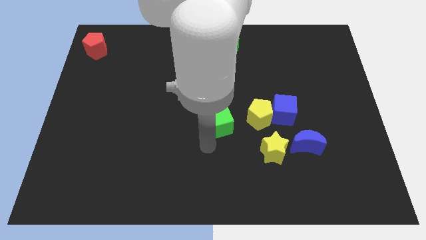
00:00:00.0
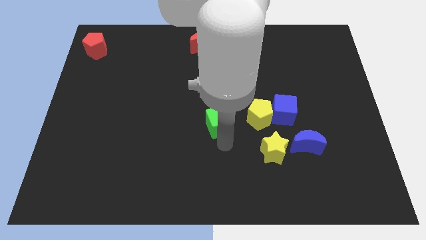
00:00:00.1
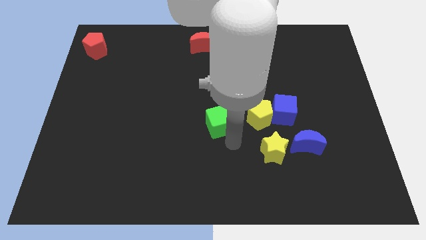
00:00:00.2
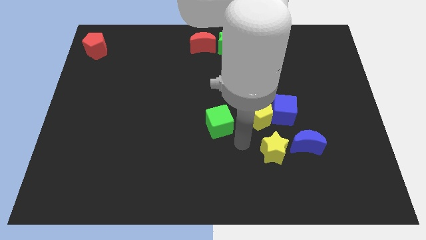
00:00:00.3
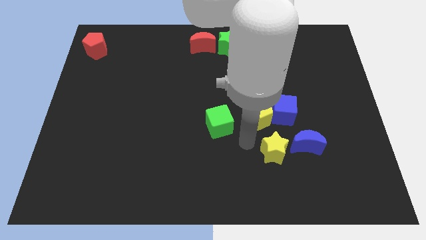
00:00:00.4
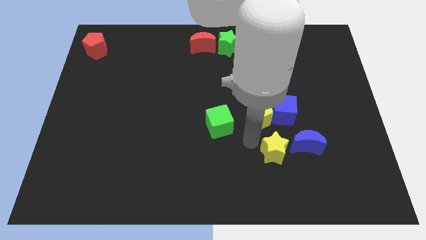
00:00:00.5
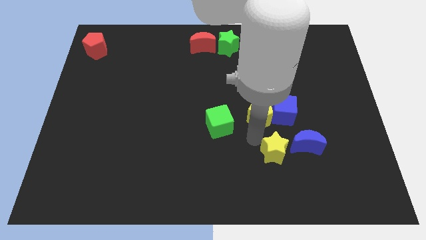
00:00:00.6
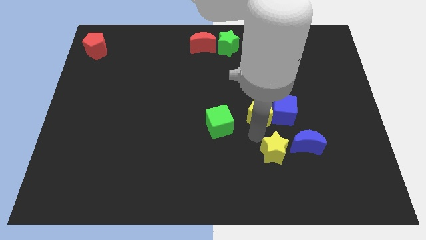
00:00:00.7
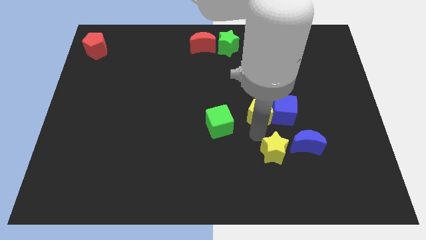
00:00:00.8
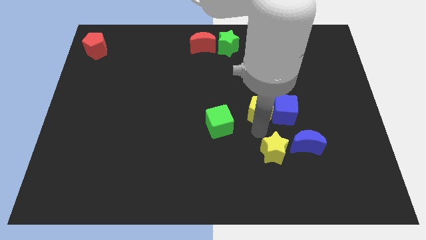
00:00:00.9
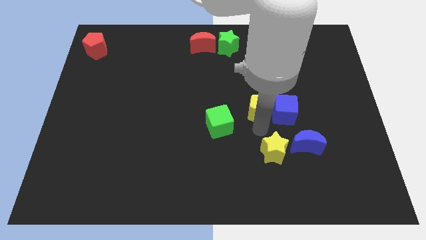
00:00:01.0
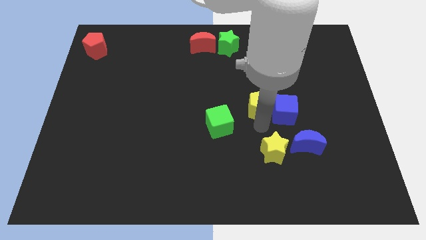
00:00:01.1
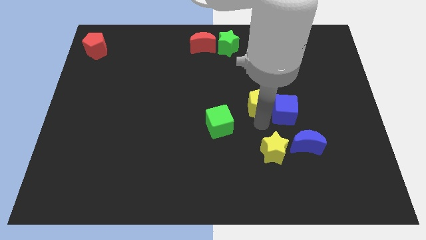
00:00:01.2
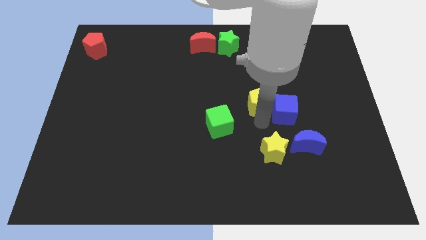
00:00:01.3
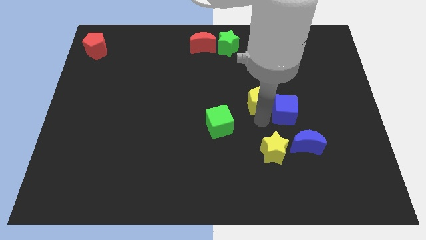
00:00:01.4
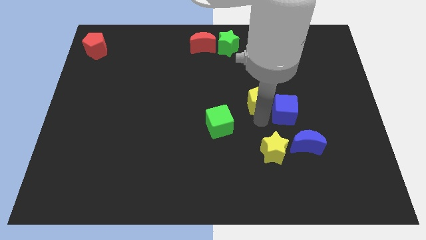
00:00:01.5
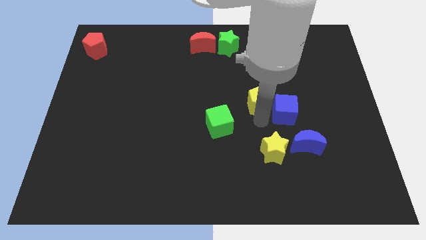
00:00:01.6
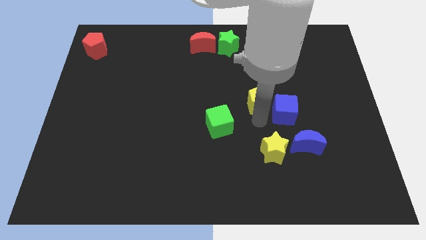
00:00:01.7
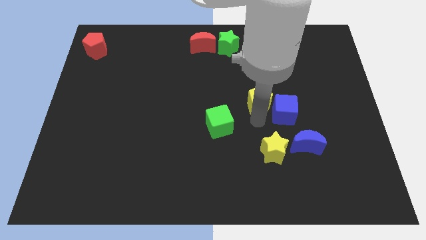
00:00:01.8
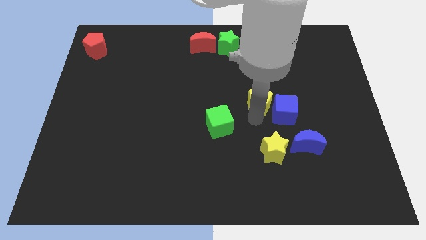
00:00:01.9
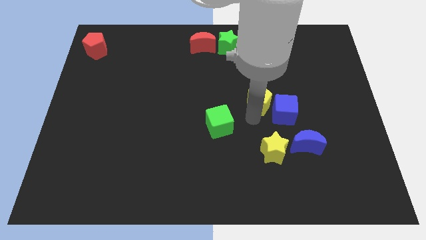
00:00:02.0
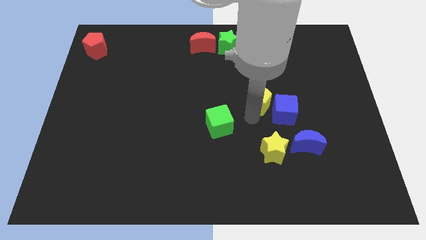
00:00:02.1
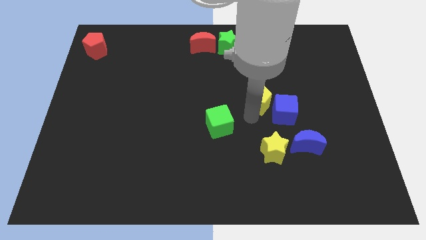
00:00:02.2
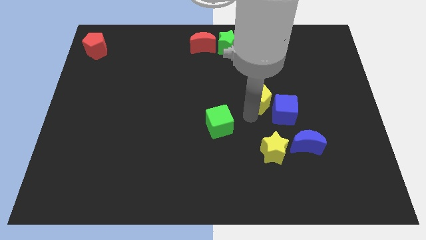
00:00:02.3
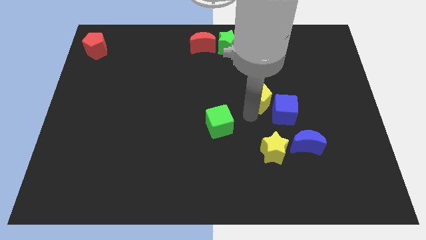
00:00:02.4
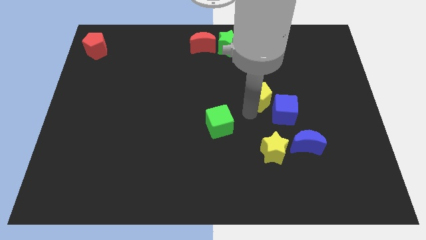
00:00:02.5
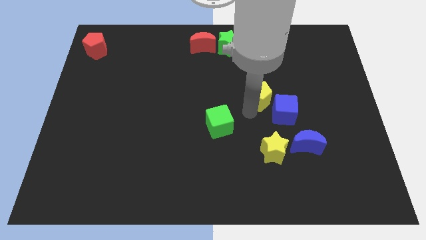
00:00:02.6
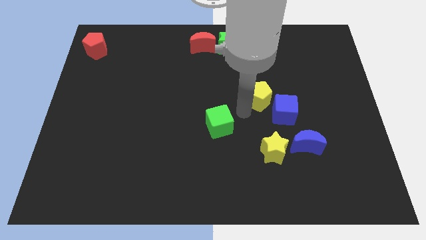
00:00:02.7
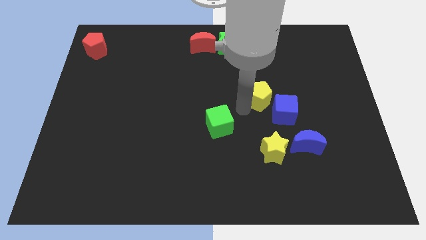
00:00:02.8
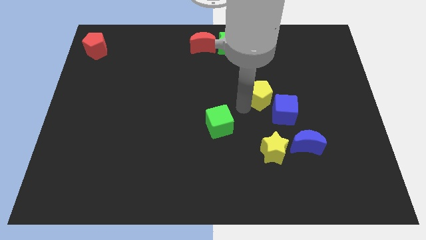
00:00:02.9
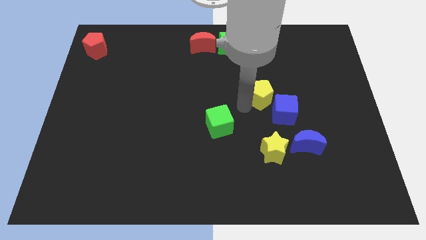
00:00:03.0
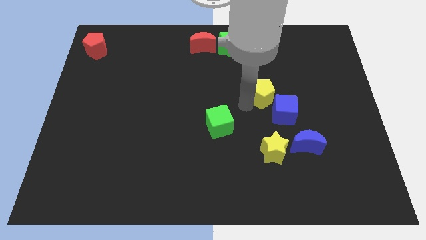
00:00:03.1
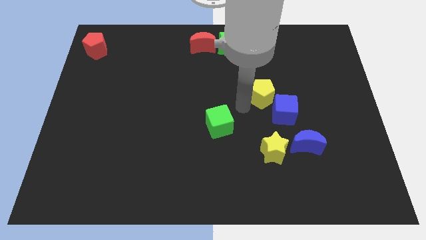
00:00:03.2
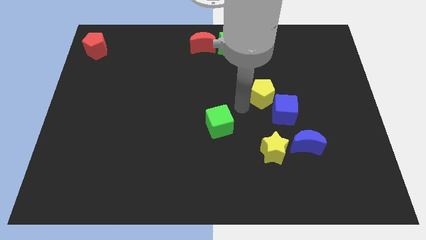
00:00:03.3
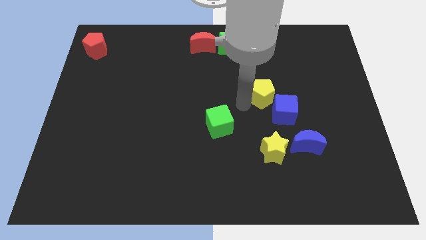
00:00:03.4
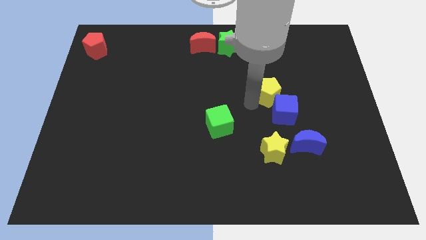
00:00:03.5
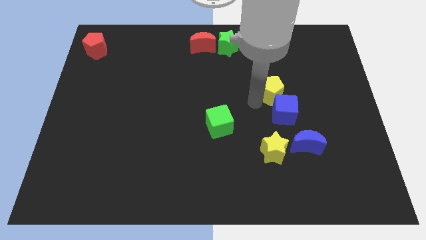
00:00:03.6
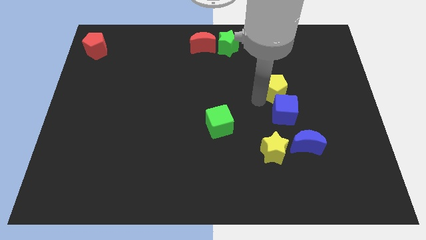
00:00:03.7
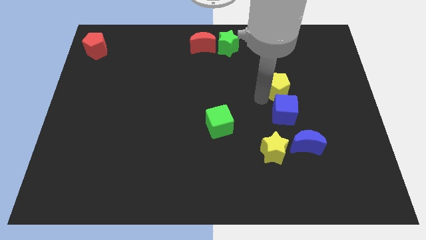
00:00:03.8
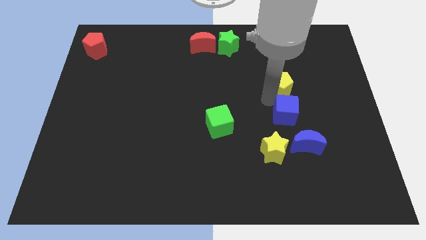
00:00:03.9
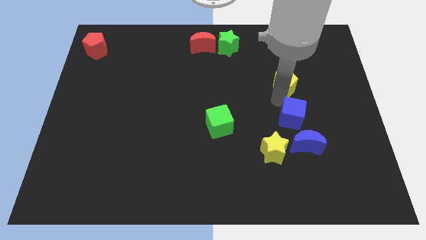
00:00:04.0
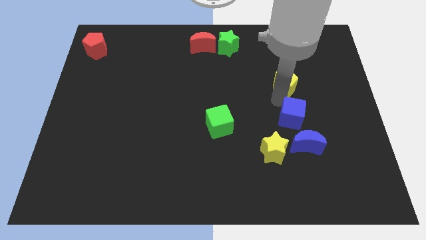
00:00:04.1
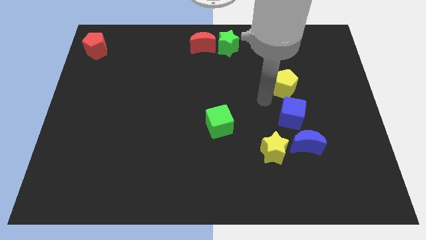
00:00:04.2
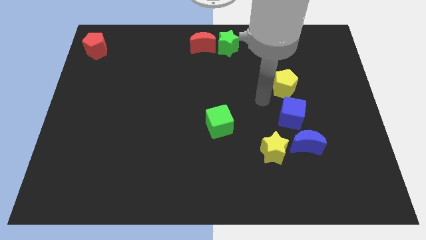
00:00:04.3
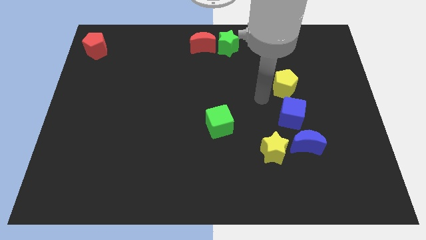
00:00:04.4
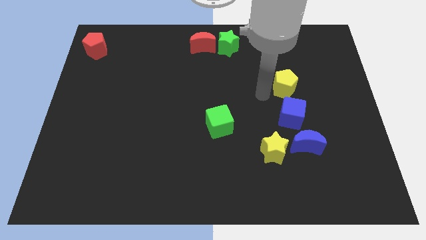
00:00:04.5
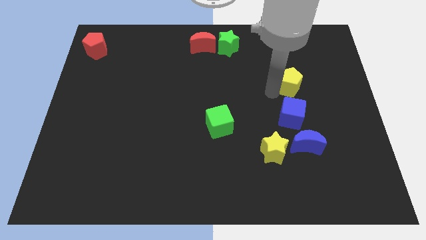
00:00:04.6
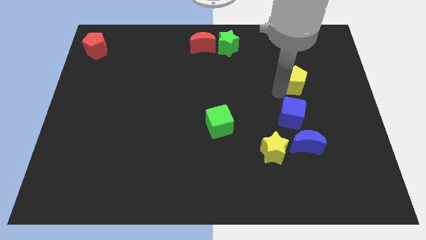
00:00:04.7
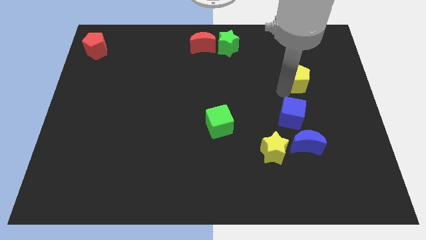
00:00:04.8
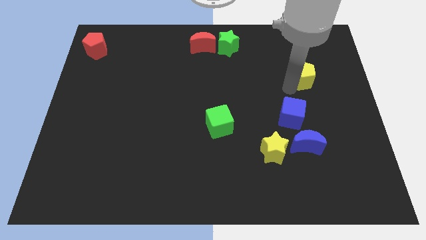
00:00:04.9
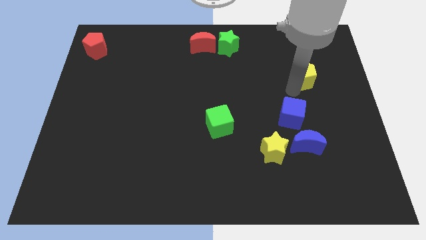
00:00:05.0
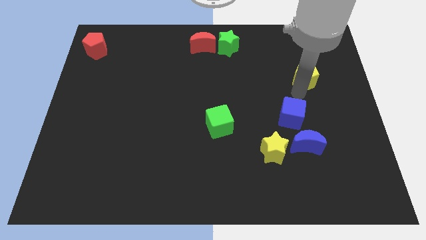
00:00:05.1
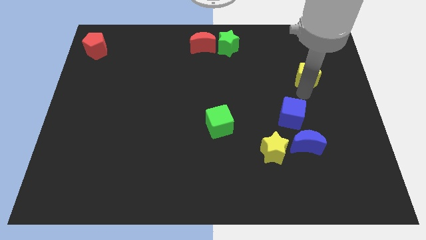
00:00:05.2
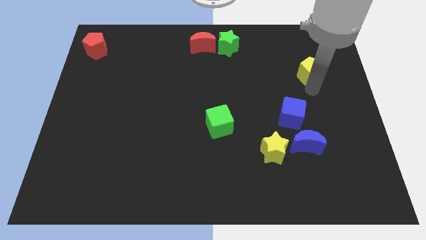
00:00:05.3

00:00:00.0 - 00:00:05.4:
separate the yellow pentagon from the blue cube

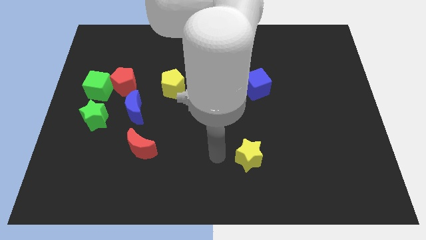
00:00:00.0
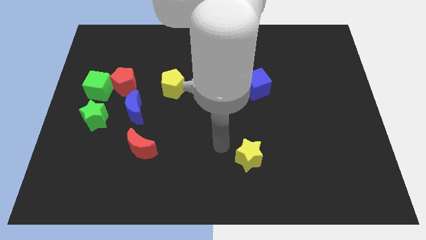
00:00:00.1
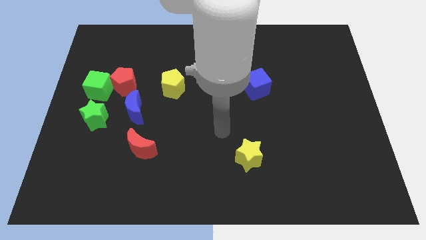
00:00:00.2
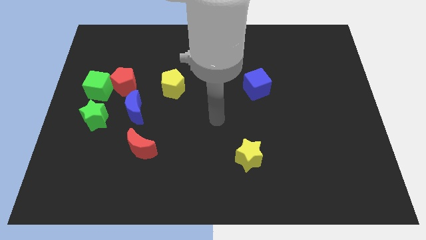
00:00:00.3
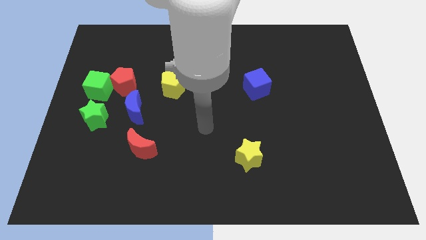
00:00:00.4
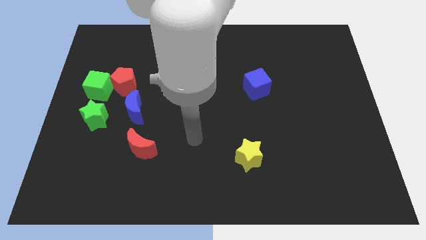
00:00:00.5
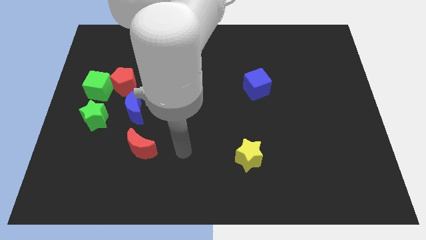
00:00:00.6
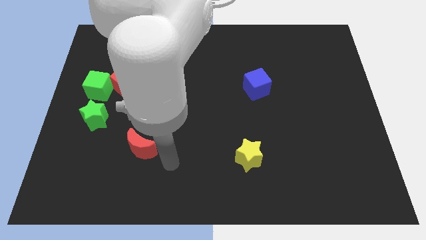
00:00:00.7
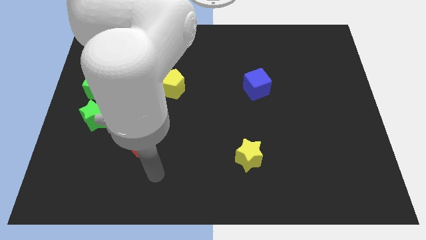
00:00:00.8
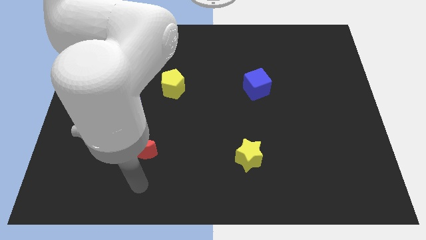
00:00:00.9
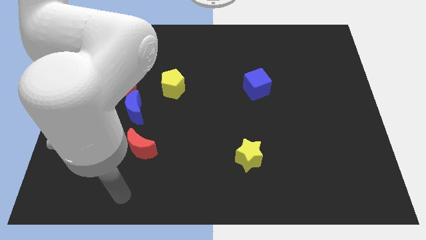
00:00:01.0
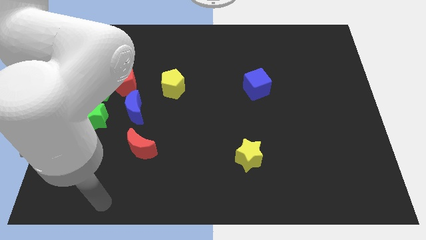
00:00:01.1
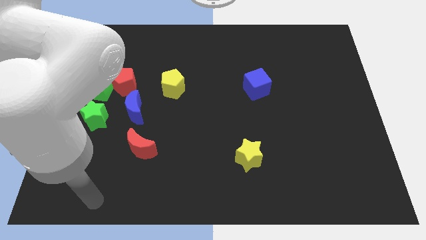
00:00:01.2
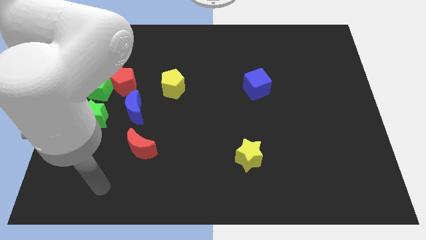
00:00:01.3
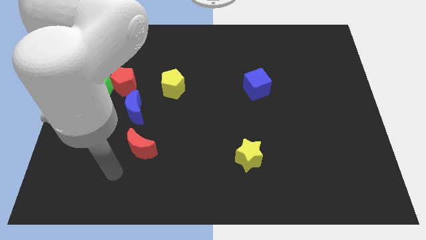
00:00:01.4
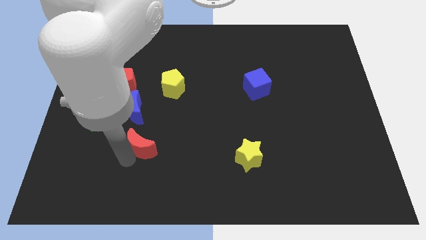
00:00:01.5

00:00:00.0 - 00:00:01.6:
move the arm to the bottom of the red crescent

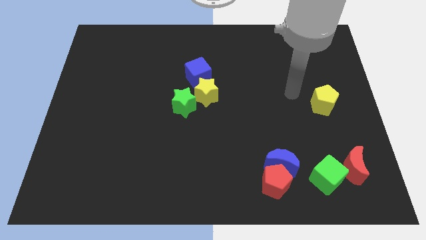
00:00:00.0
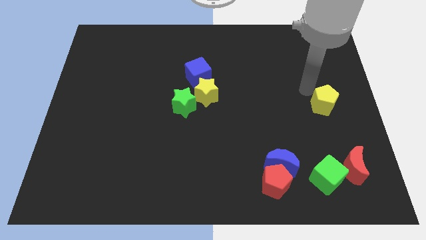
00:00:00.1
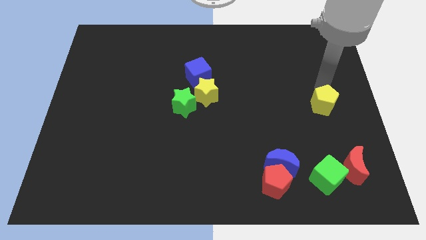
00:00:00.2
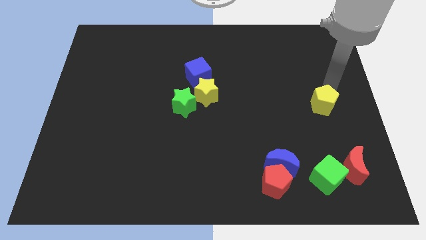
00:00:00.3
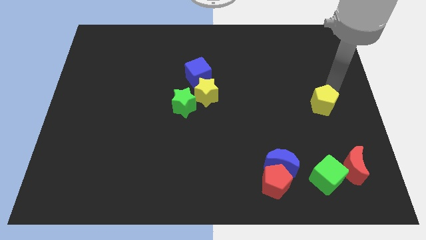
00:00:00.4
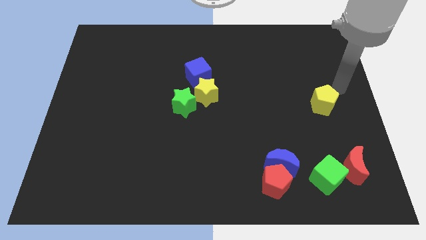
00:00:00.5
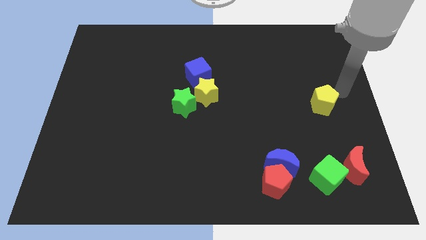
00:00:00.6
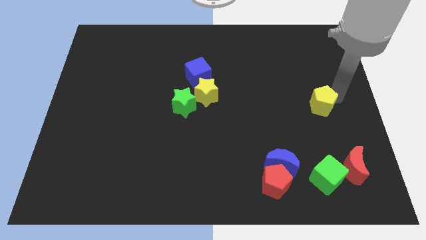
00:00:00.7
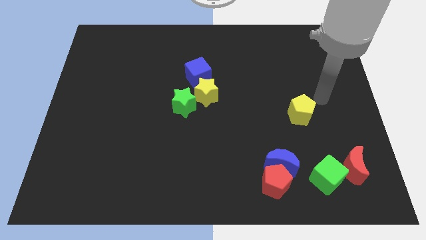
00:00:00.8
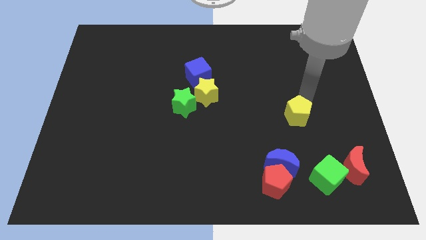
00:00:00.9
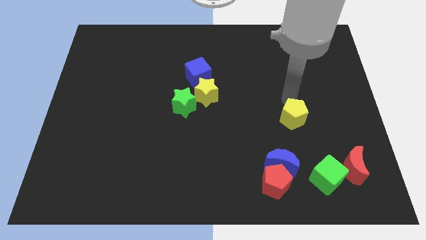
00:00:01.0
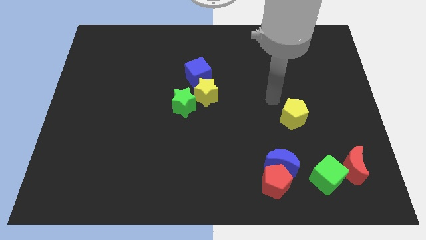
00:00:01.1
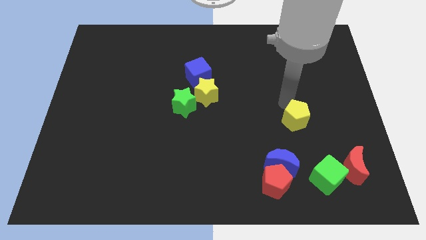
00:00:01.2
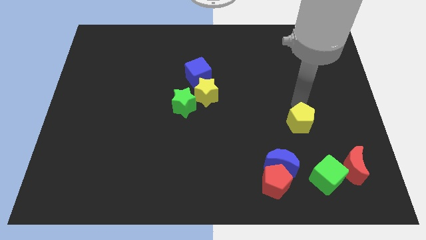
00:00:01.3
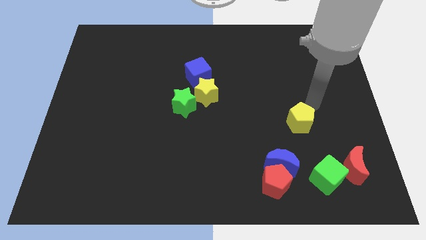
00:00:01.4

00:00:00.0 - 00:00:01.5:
place the yellow pentagon above the blue moon
